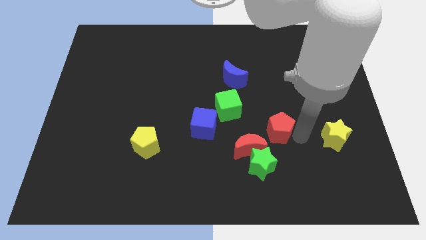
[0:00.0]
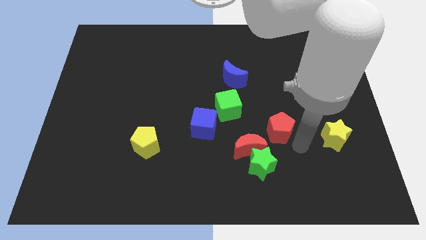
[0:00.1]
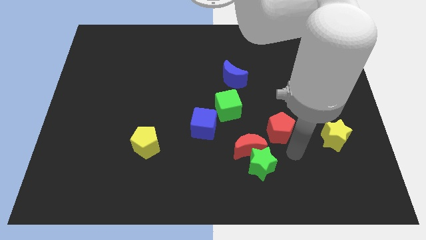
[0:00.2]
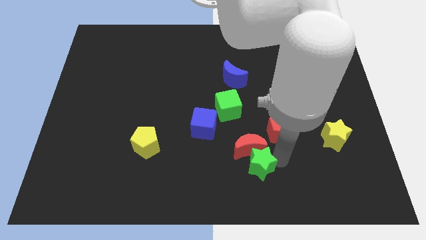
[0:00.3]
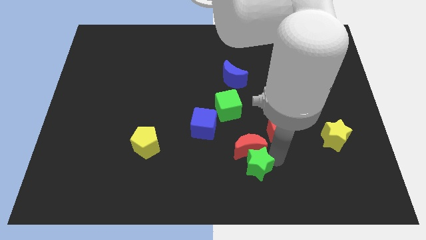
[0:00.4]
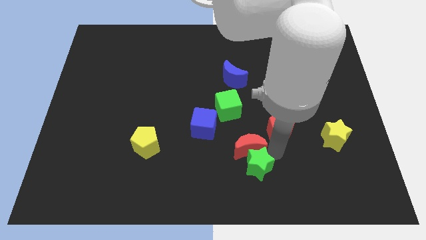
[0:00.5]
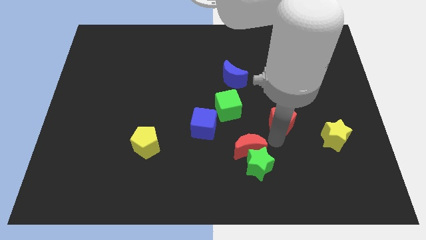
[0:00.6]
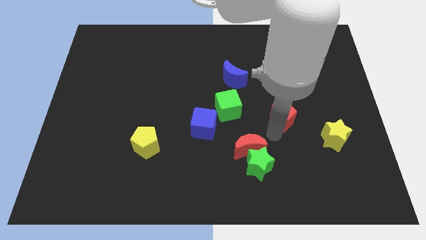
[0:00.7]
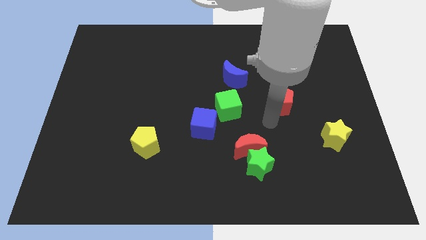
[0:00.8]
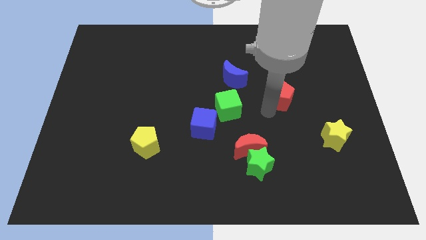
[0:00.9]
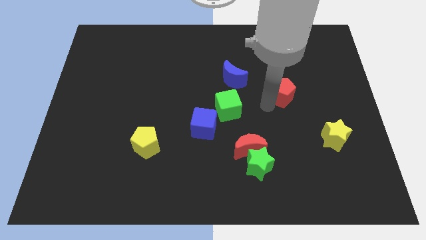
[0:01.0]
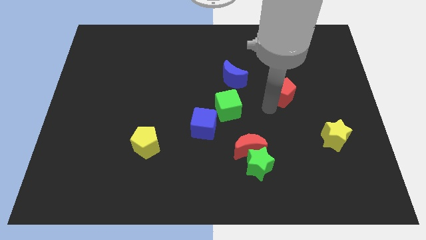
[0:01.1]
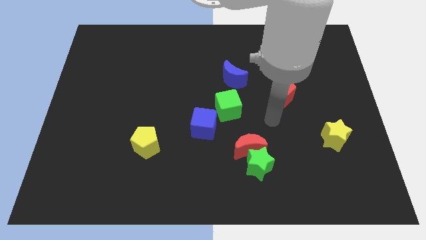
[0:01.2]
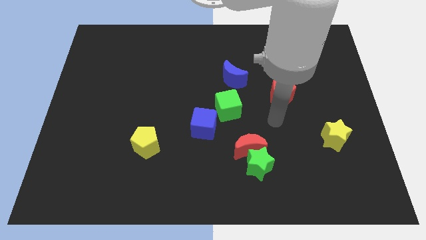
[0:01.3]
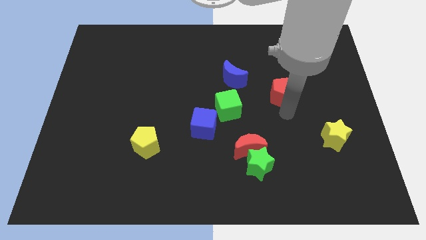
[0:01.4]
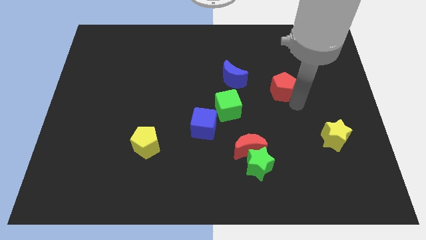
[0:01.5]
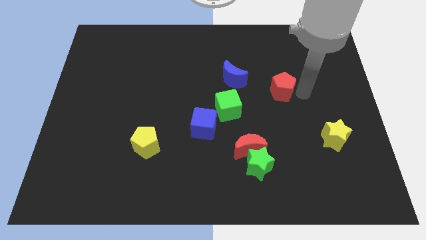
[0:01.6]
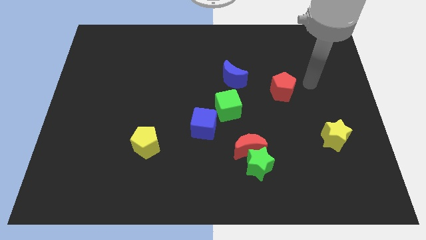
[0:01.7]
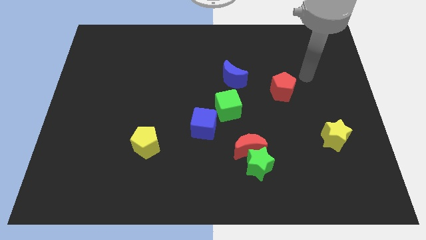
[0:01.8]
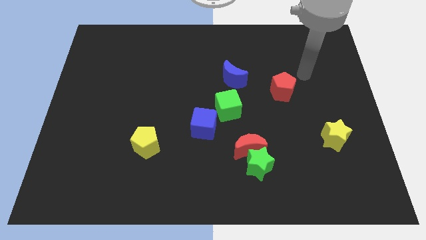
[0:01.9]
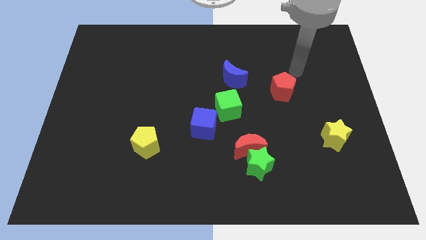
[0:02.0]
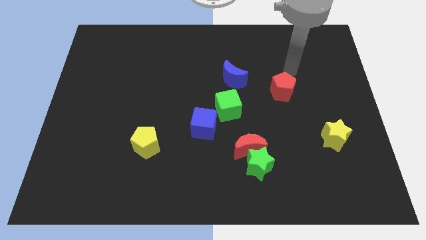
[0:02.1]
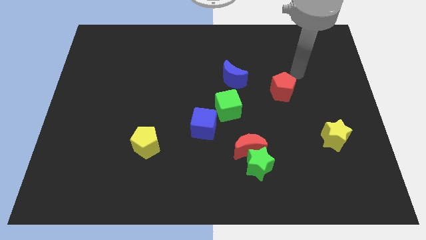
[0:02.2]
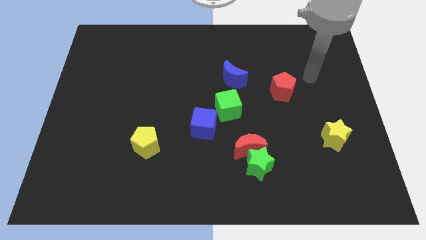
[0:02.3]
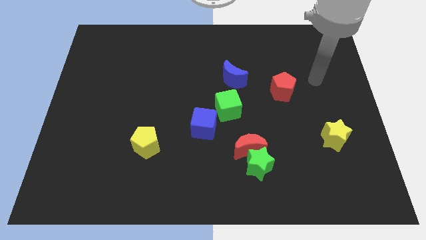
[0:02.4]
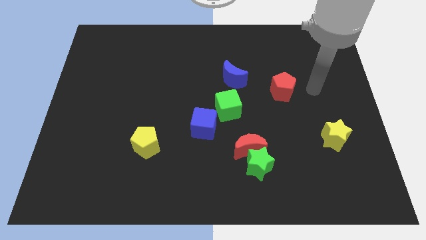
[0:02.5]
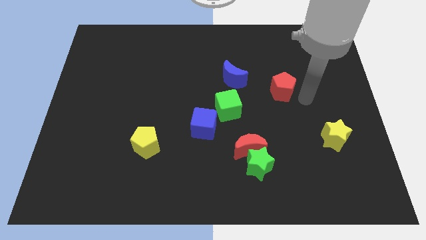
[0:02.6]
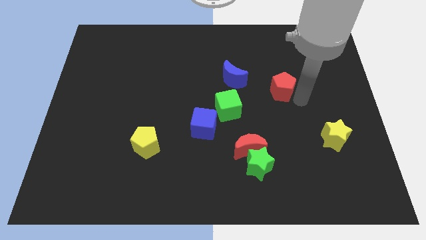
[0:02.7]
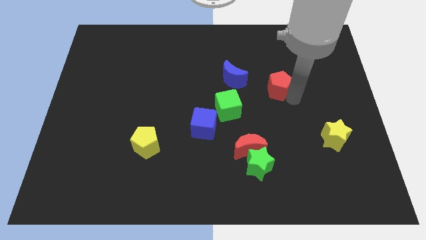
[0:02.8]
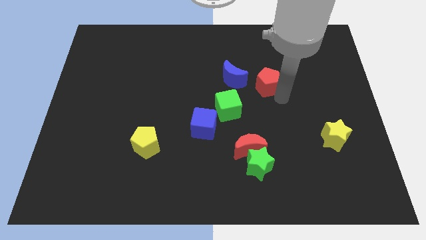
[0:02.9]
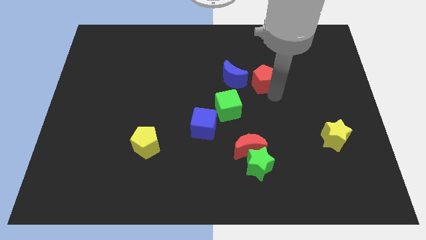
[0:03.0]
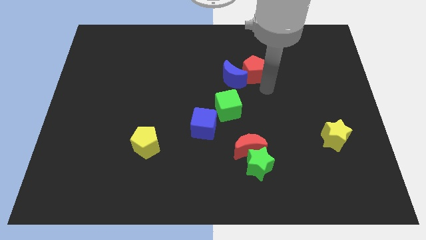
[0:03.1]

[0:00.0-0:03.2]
place red pentagon right to the blue moon

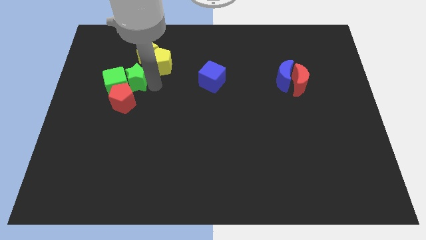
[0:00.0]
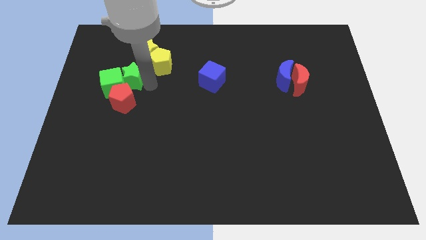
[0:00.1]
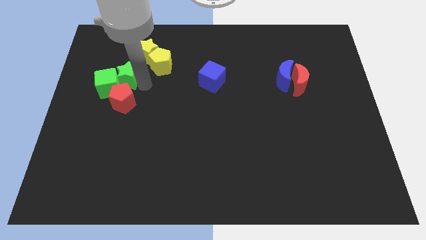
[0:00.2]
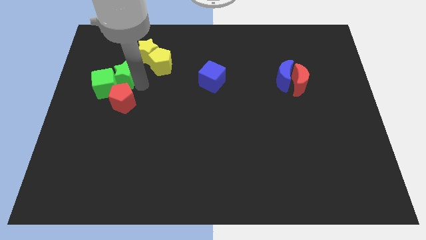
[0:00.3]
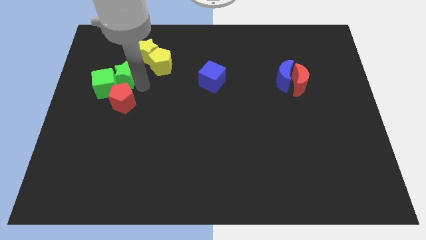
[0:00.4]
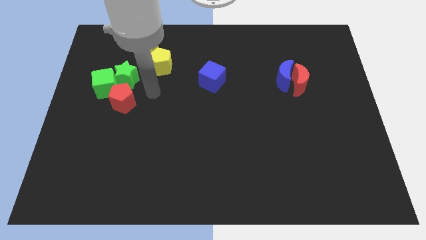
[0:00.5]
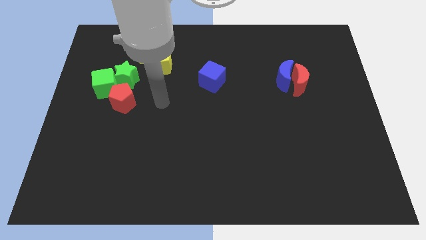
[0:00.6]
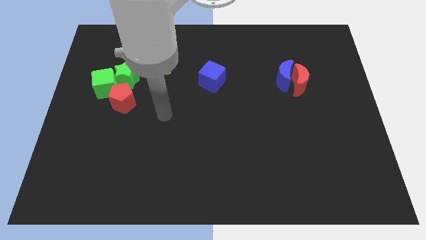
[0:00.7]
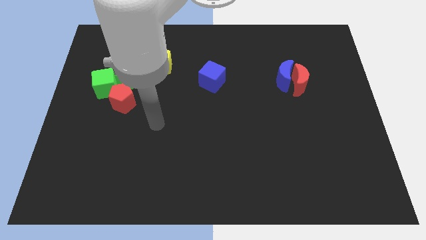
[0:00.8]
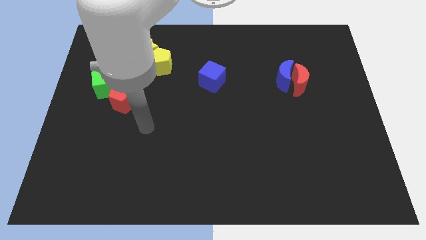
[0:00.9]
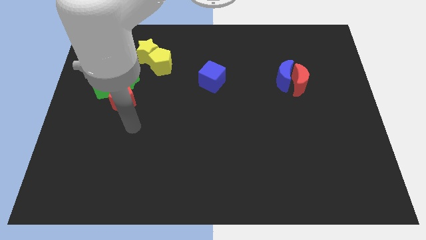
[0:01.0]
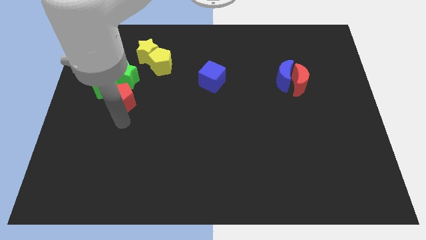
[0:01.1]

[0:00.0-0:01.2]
slightly push the green cube and green star to the left

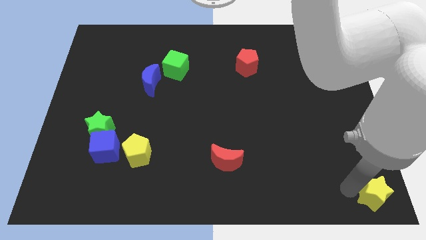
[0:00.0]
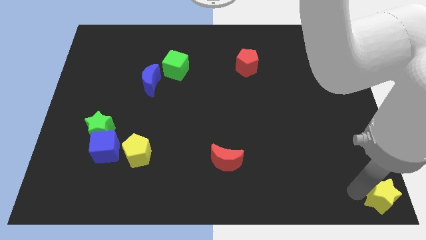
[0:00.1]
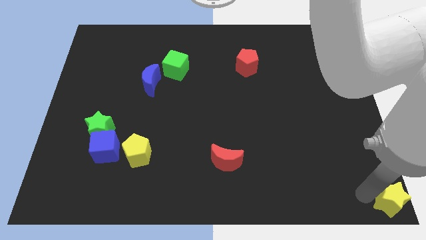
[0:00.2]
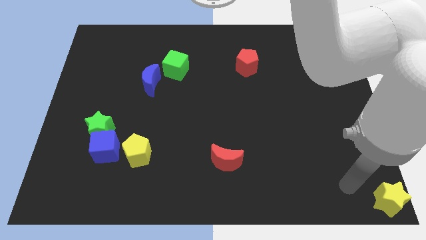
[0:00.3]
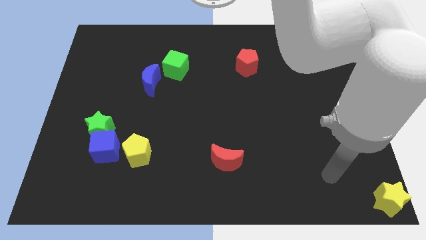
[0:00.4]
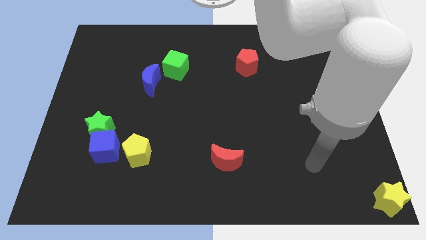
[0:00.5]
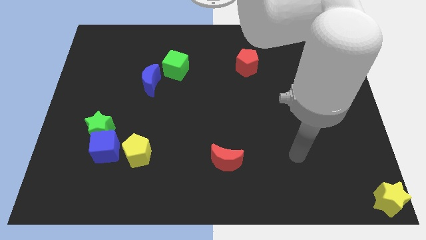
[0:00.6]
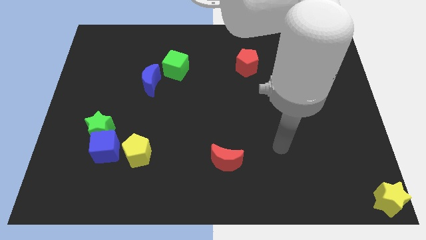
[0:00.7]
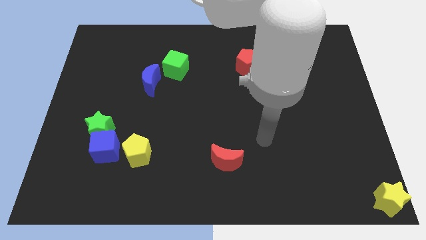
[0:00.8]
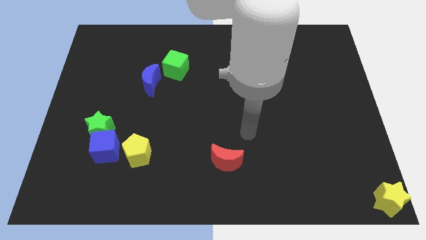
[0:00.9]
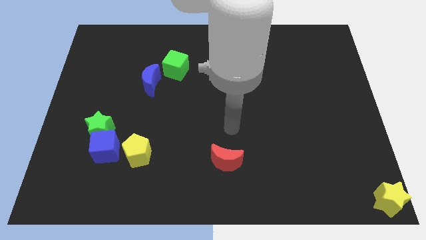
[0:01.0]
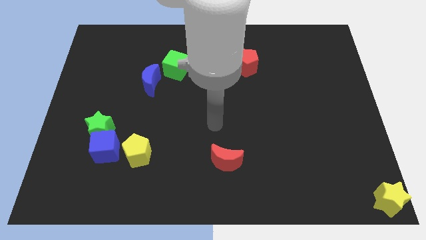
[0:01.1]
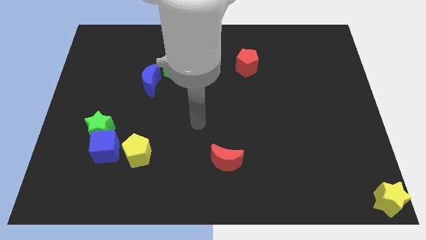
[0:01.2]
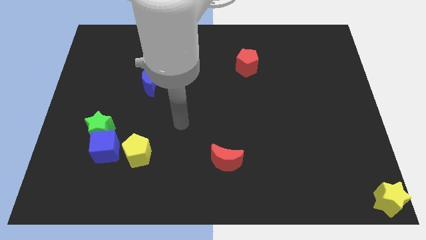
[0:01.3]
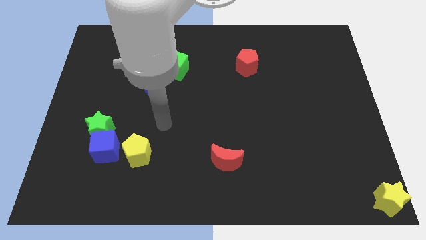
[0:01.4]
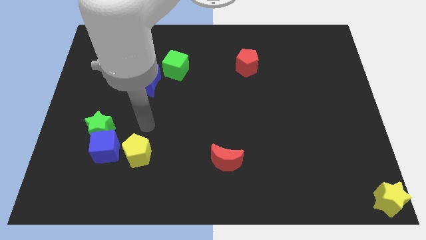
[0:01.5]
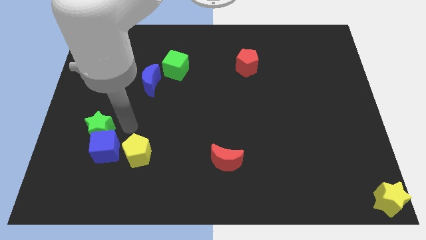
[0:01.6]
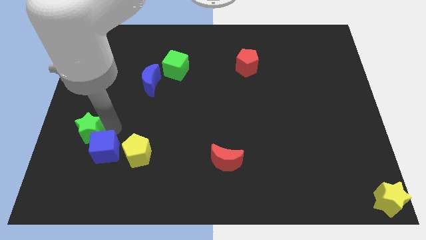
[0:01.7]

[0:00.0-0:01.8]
move the arm towards the green star

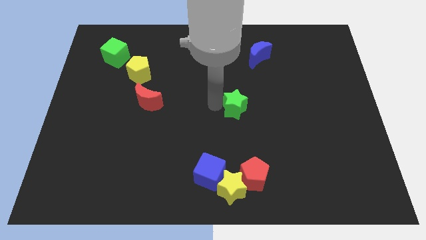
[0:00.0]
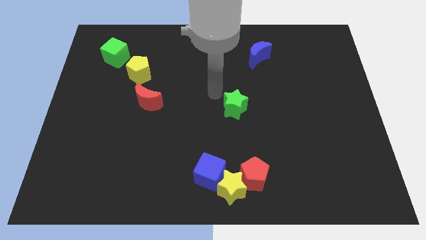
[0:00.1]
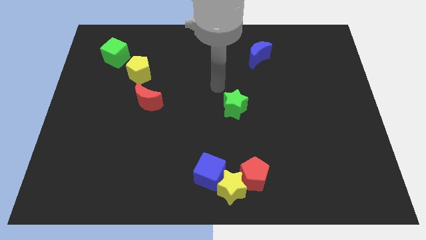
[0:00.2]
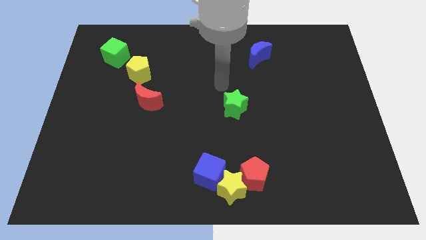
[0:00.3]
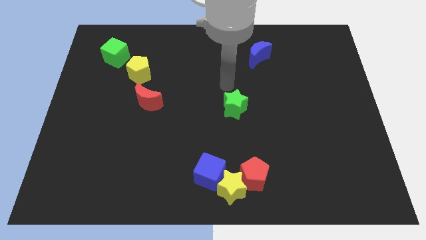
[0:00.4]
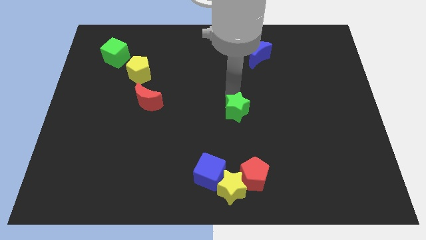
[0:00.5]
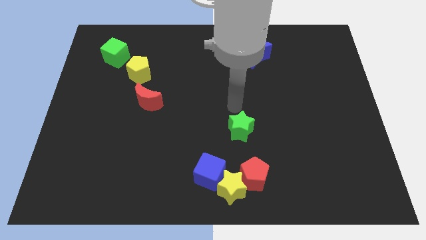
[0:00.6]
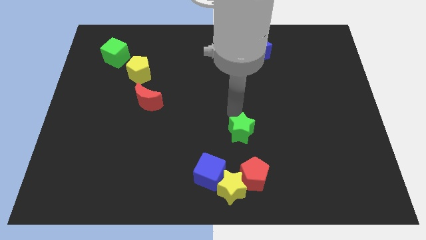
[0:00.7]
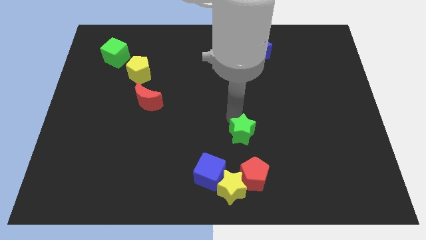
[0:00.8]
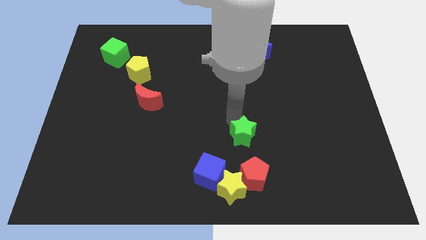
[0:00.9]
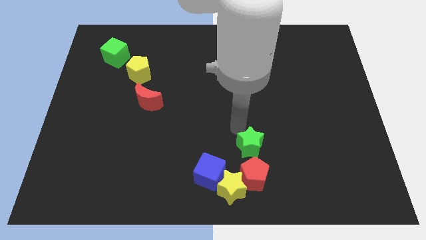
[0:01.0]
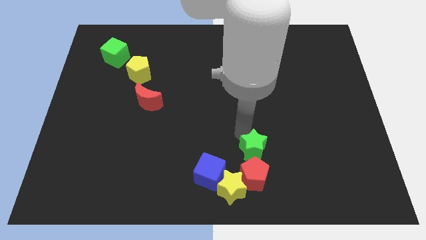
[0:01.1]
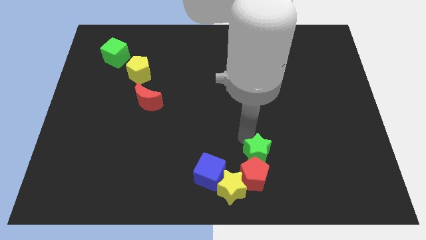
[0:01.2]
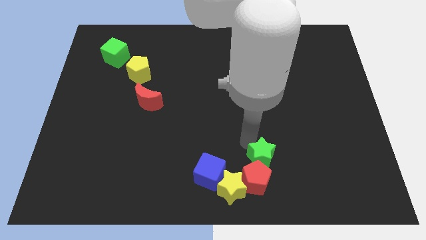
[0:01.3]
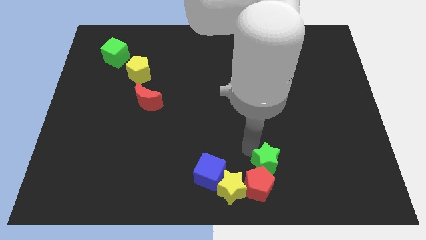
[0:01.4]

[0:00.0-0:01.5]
push the green star into the red pentagon

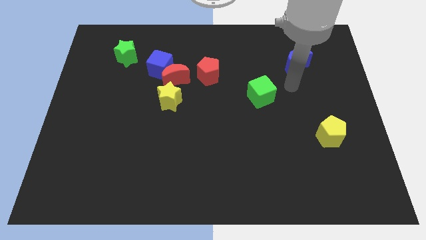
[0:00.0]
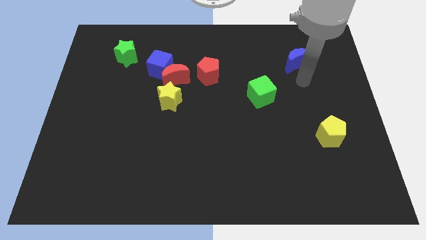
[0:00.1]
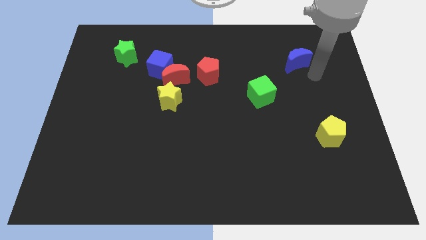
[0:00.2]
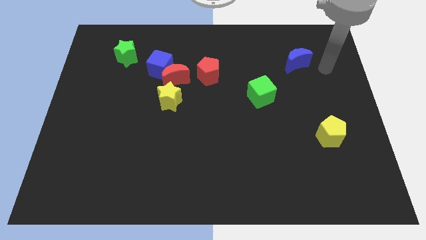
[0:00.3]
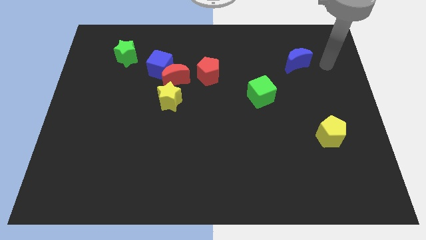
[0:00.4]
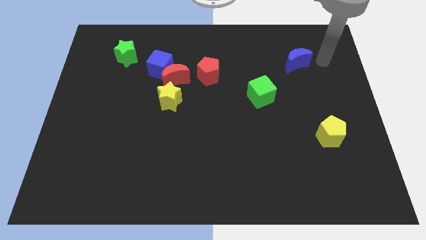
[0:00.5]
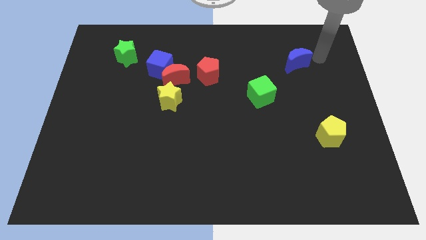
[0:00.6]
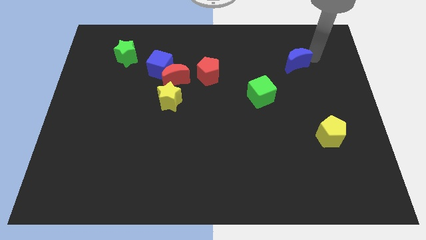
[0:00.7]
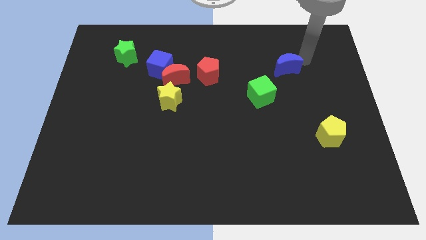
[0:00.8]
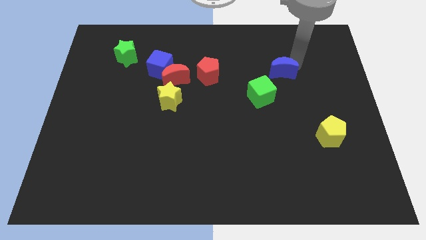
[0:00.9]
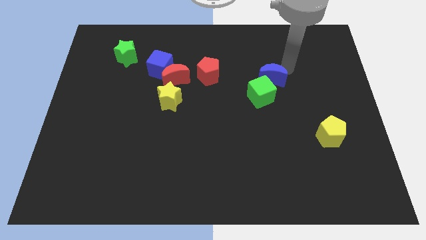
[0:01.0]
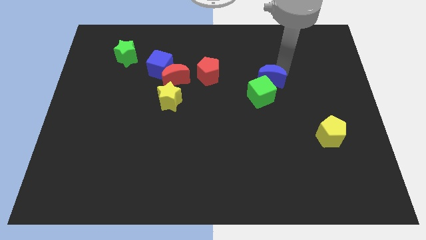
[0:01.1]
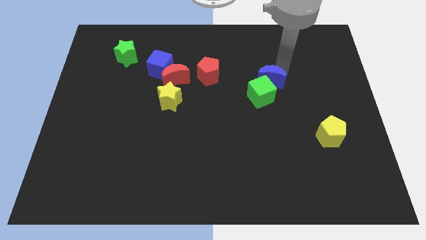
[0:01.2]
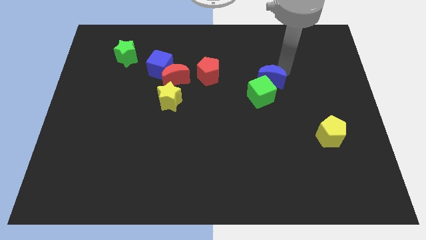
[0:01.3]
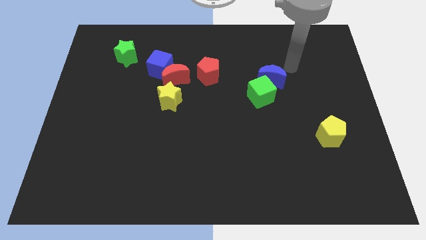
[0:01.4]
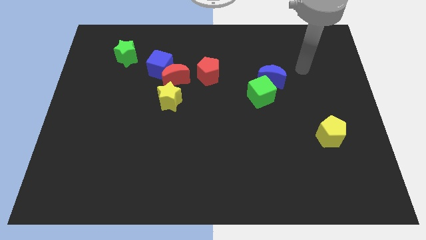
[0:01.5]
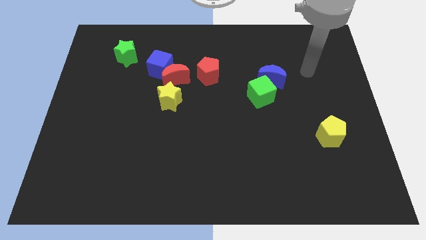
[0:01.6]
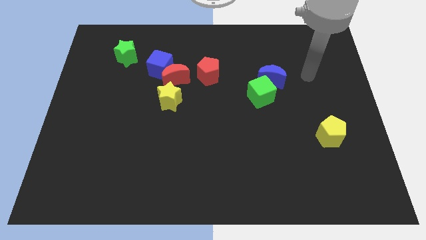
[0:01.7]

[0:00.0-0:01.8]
move the blue moon into the green cube
